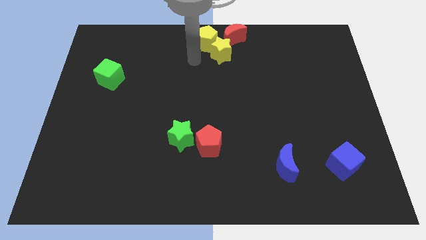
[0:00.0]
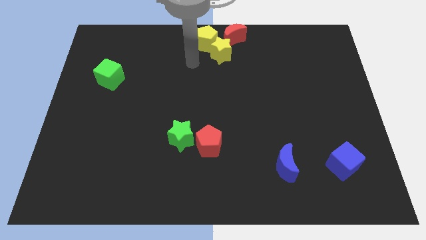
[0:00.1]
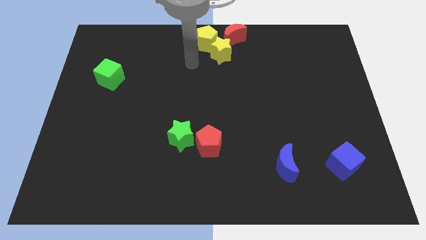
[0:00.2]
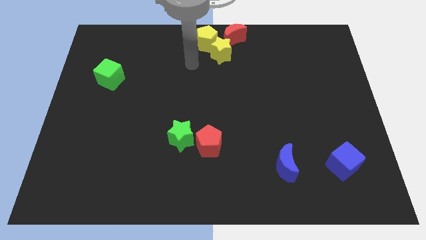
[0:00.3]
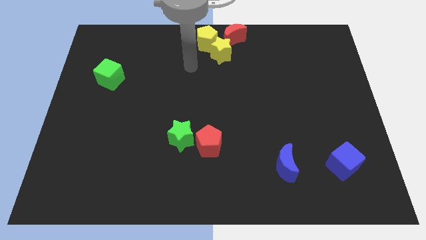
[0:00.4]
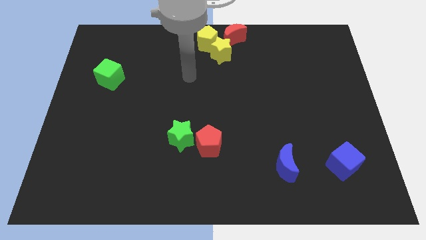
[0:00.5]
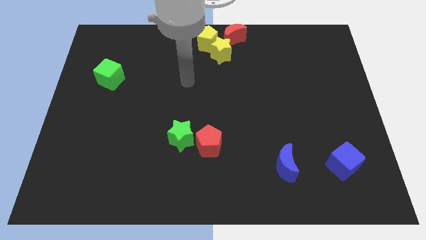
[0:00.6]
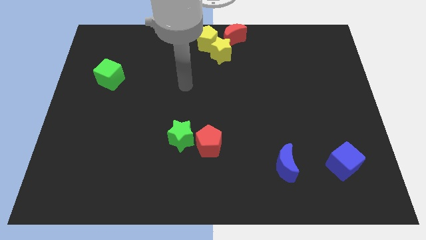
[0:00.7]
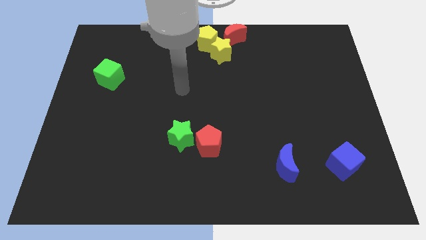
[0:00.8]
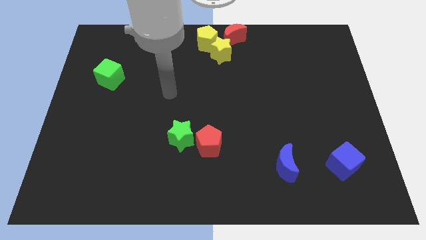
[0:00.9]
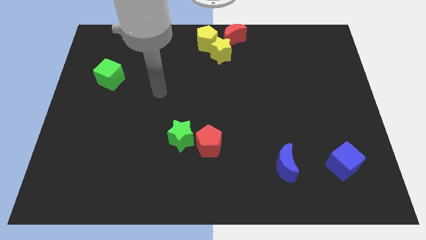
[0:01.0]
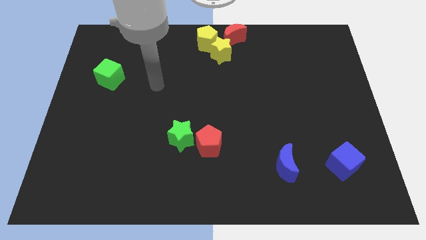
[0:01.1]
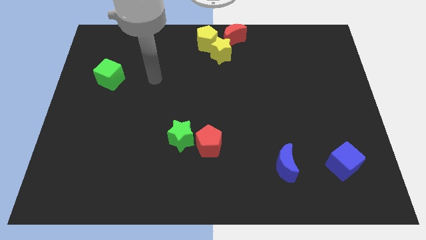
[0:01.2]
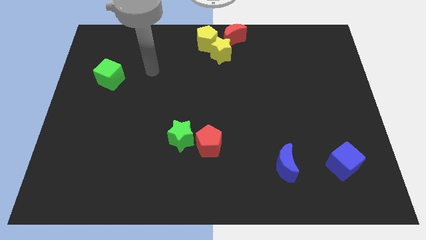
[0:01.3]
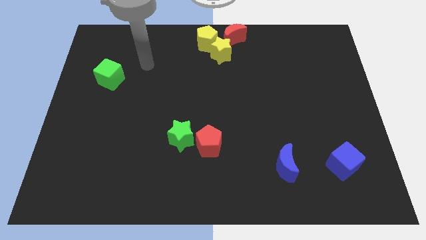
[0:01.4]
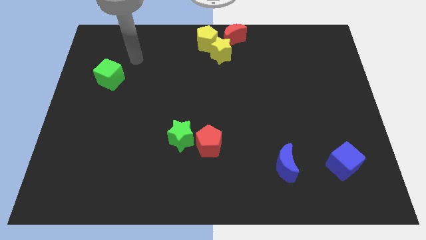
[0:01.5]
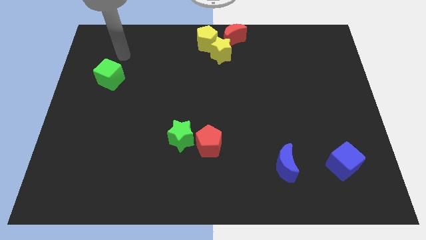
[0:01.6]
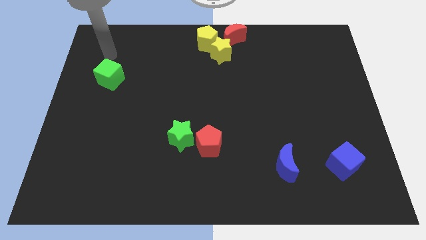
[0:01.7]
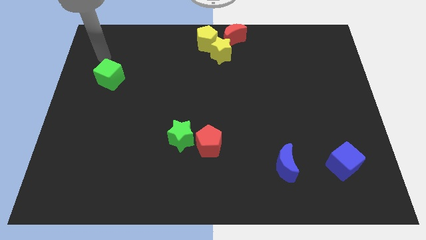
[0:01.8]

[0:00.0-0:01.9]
point your arm at the top of green cube

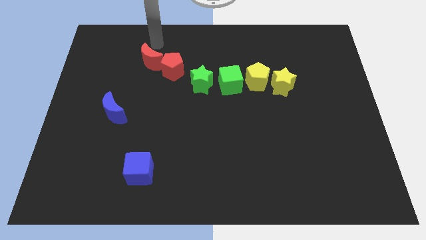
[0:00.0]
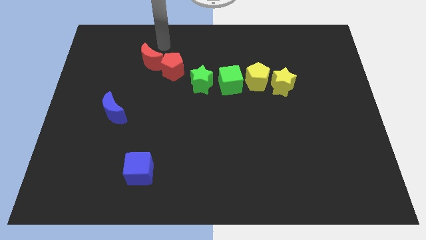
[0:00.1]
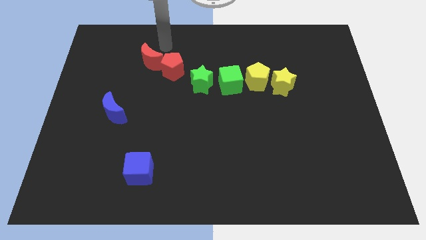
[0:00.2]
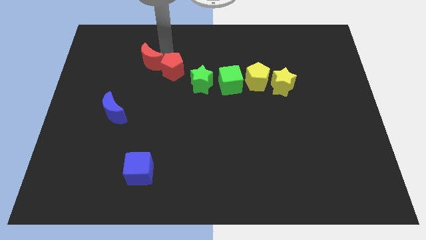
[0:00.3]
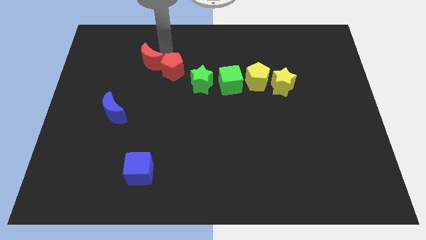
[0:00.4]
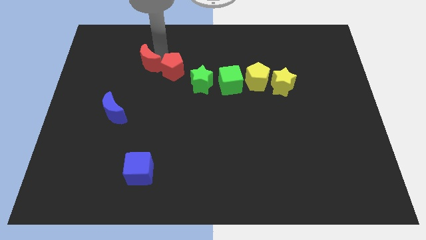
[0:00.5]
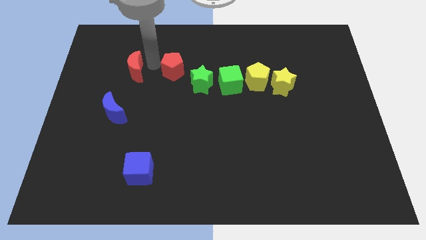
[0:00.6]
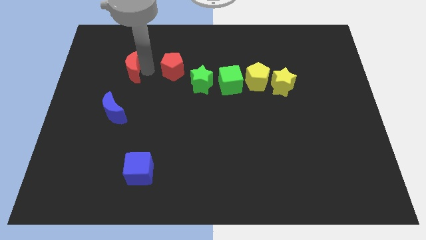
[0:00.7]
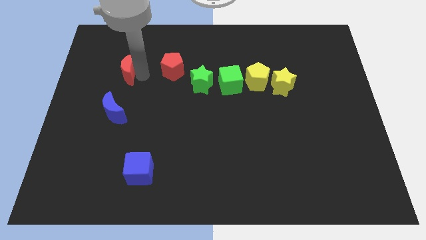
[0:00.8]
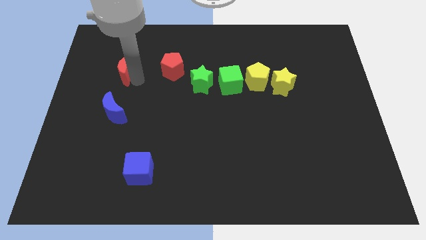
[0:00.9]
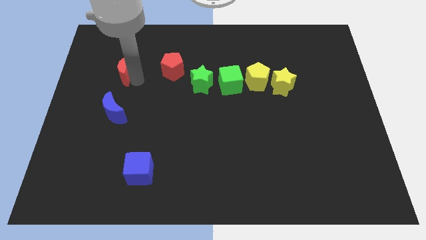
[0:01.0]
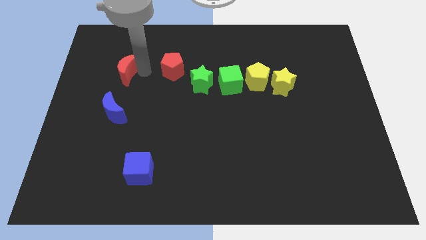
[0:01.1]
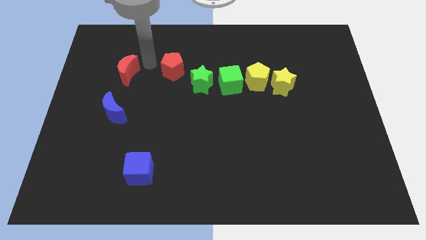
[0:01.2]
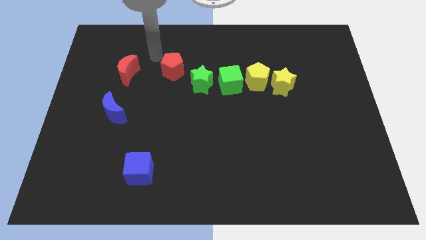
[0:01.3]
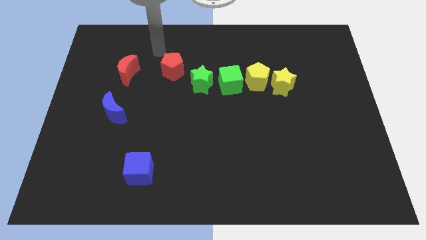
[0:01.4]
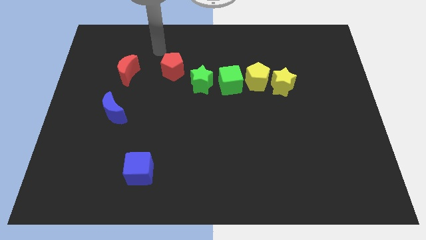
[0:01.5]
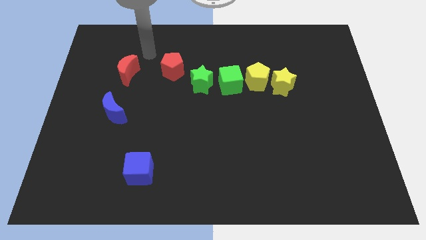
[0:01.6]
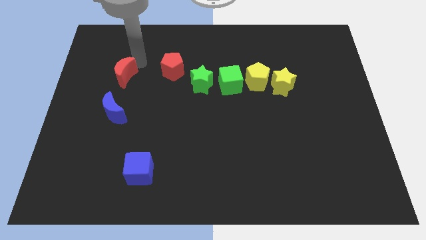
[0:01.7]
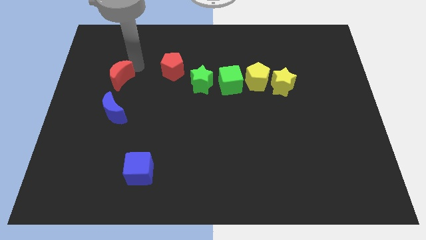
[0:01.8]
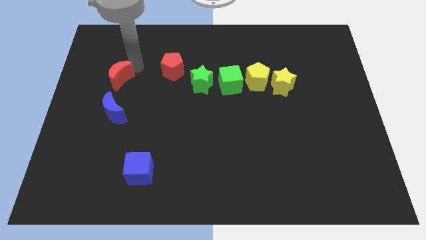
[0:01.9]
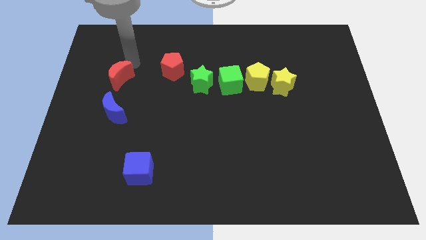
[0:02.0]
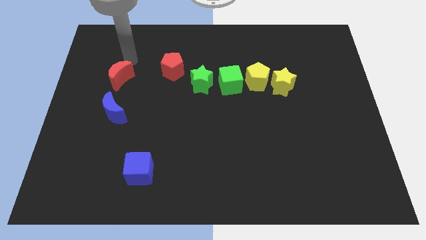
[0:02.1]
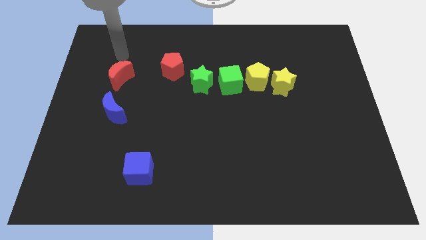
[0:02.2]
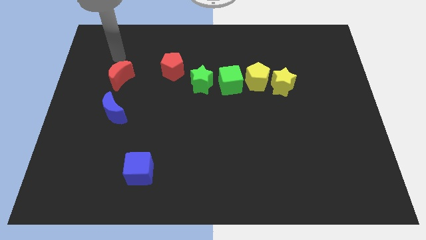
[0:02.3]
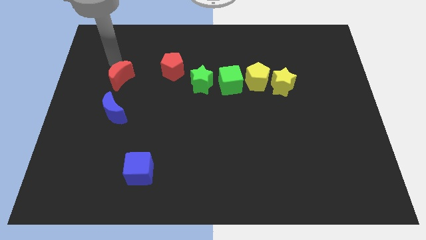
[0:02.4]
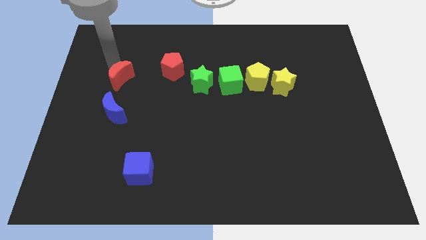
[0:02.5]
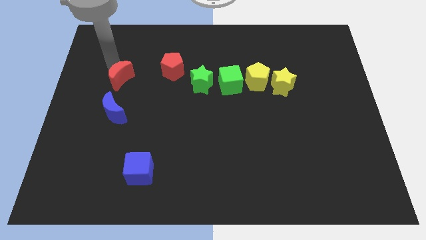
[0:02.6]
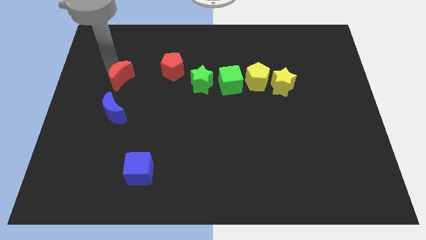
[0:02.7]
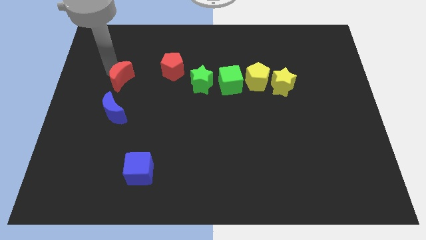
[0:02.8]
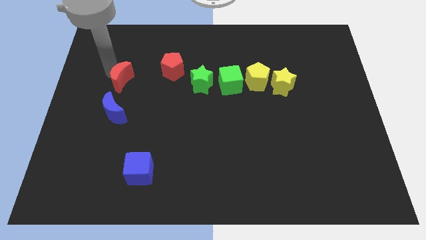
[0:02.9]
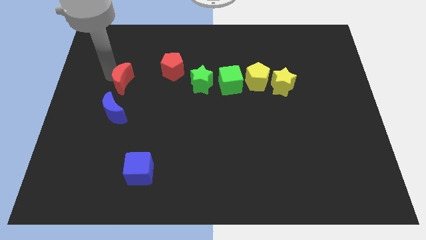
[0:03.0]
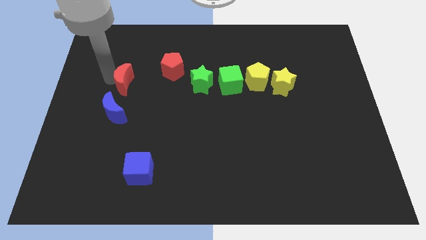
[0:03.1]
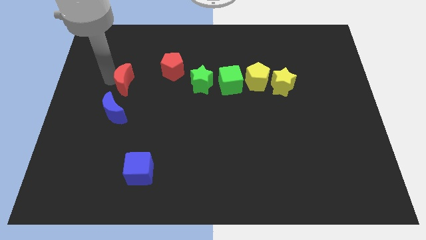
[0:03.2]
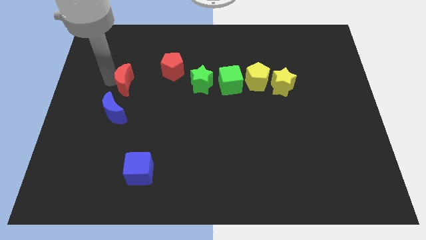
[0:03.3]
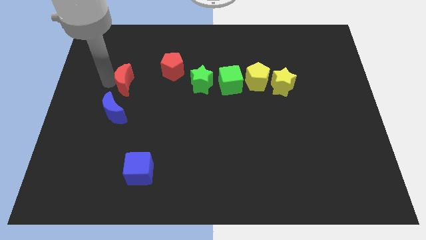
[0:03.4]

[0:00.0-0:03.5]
place the red crescent to the top of blue crescent

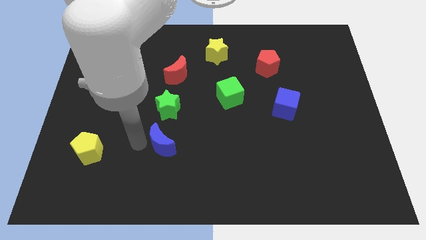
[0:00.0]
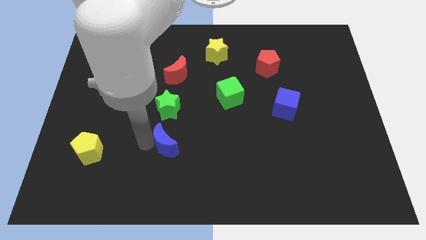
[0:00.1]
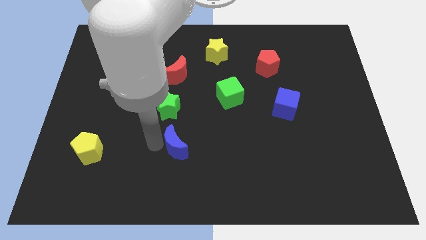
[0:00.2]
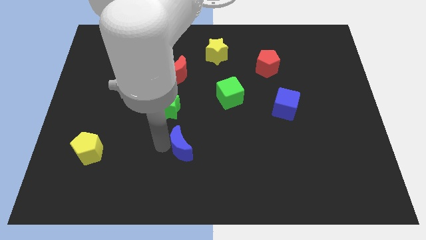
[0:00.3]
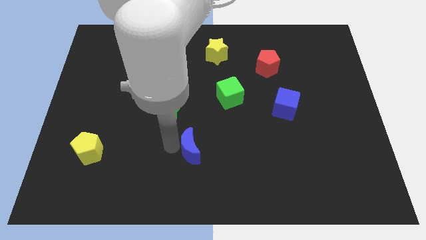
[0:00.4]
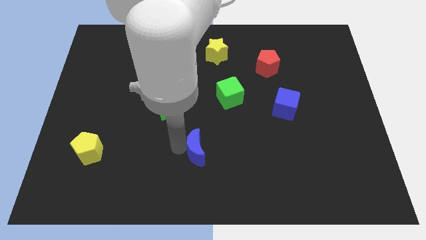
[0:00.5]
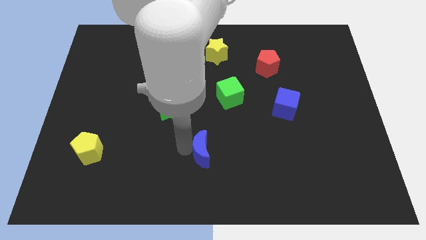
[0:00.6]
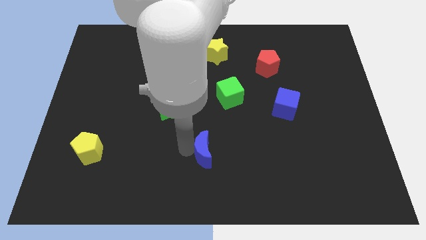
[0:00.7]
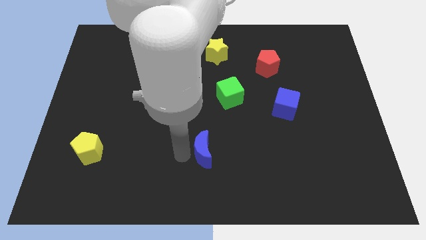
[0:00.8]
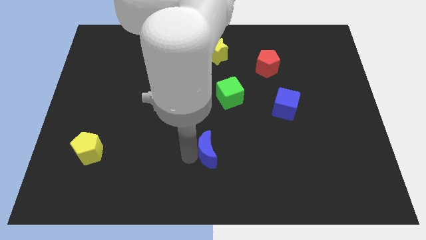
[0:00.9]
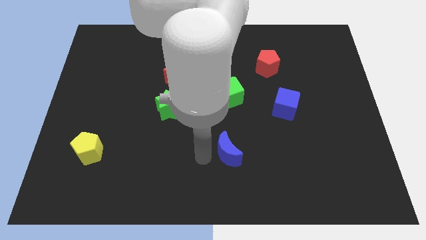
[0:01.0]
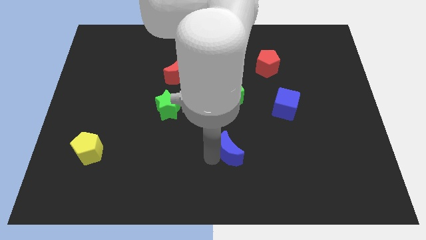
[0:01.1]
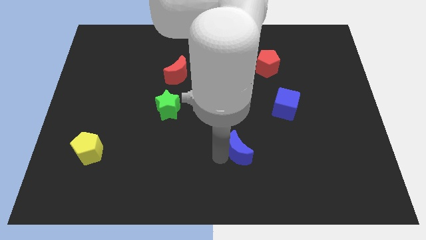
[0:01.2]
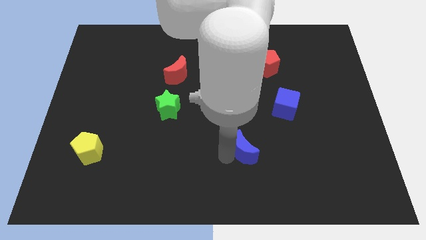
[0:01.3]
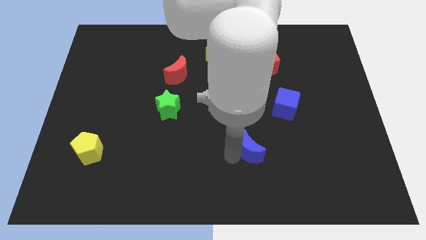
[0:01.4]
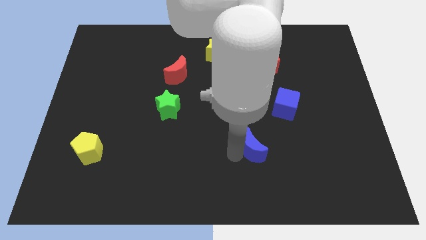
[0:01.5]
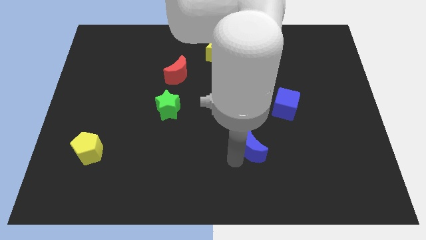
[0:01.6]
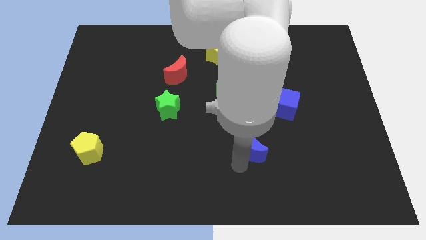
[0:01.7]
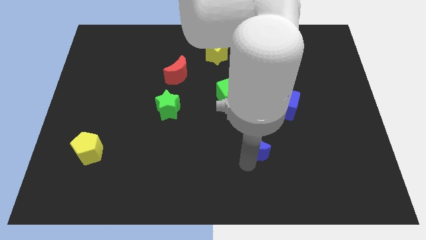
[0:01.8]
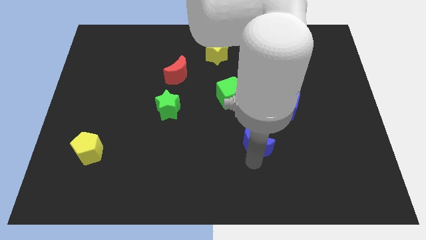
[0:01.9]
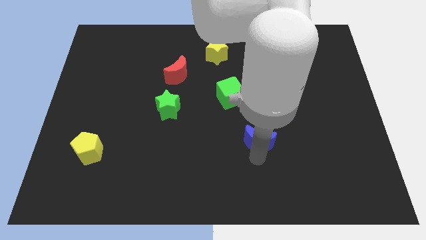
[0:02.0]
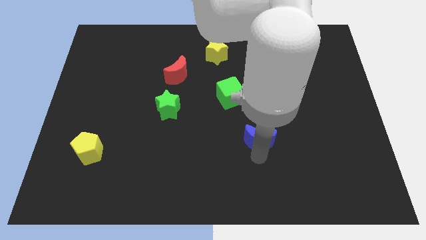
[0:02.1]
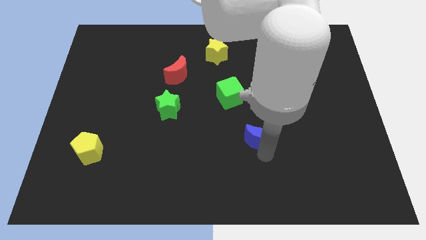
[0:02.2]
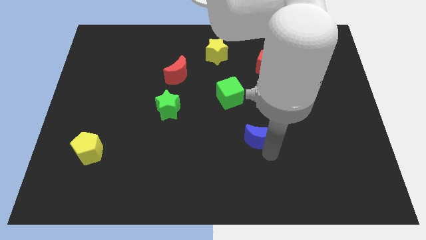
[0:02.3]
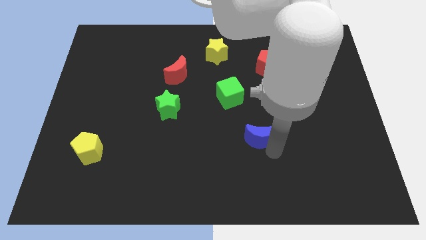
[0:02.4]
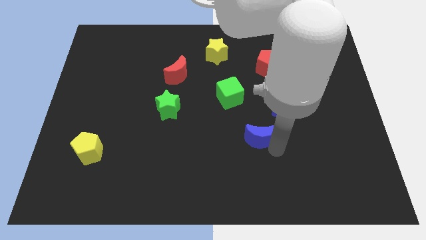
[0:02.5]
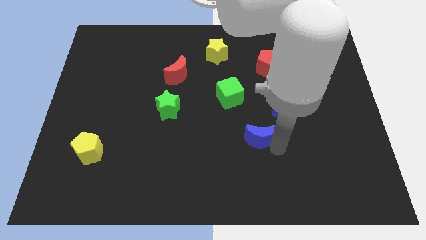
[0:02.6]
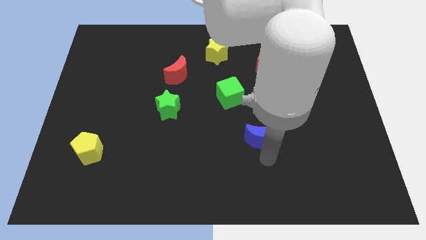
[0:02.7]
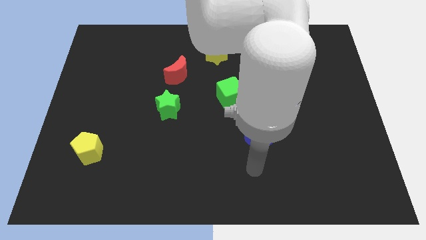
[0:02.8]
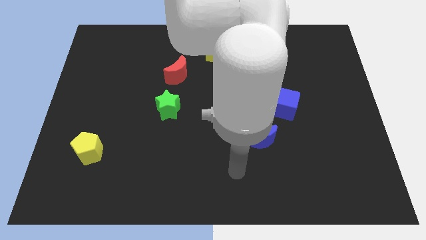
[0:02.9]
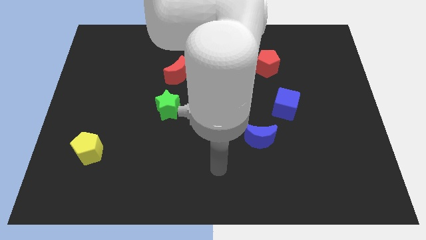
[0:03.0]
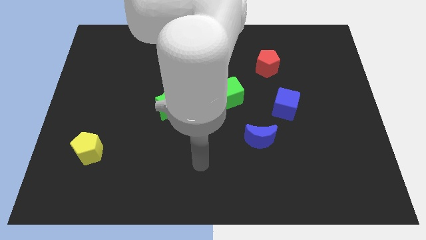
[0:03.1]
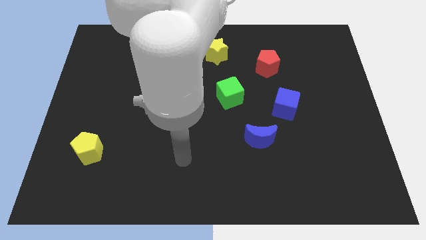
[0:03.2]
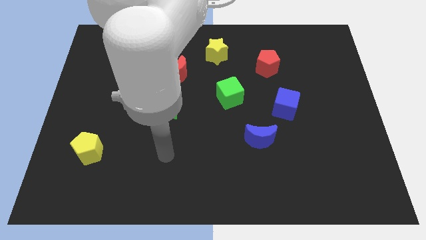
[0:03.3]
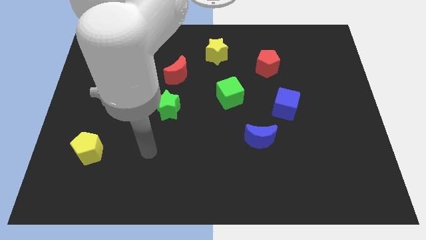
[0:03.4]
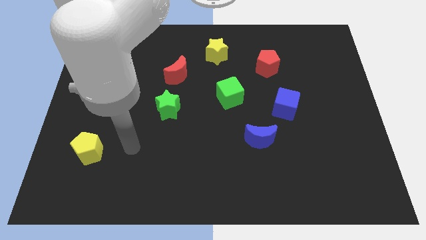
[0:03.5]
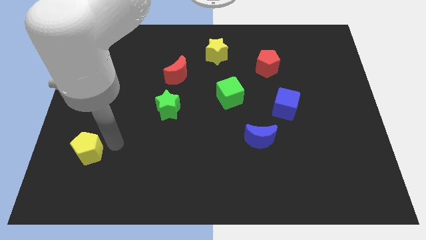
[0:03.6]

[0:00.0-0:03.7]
slide the blue crescent to the bottom left side of the blue cube

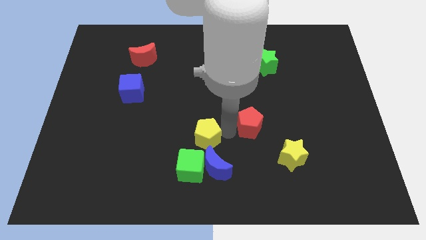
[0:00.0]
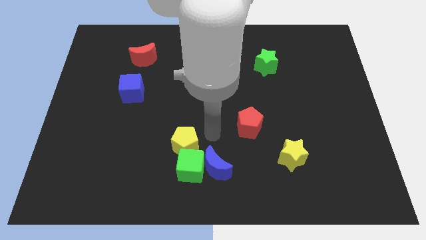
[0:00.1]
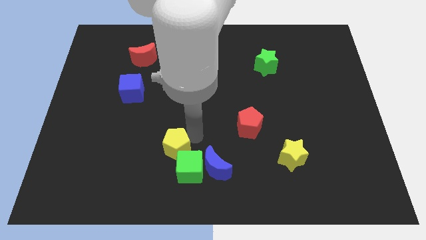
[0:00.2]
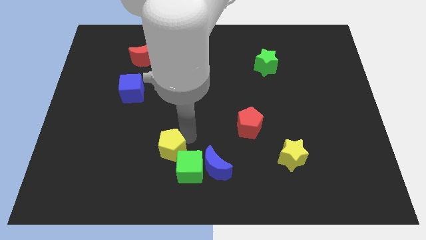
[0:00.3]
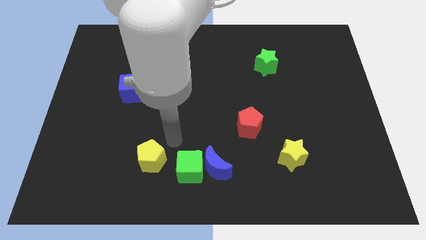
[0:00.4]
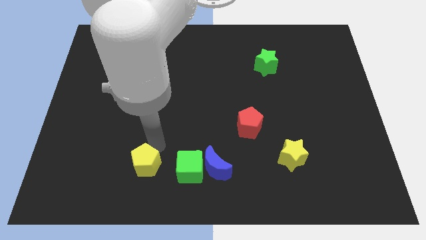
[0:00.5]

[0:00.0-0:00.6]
place yellow pentagon parallel left to green cube
